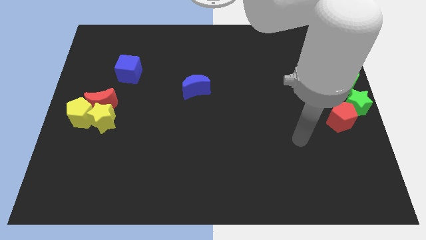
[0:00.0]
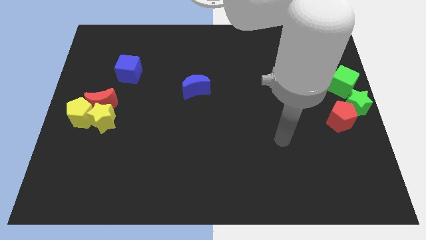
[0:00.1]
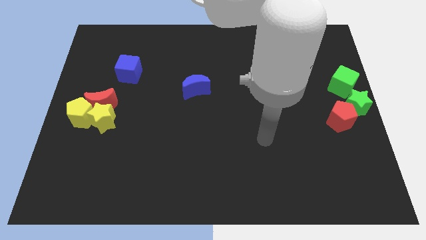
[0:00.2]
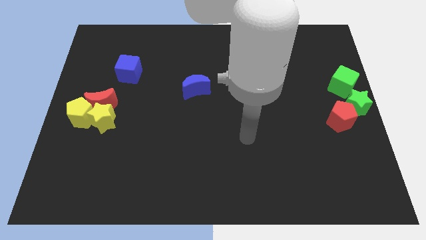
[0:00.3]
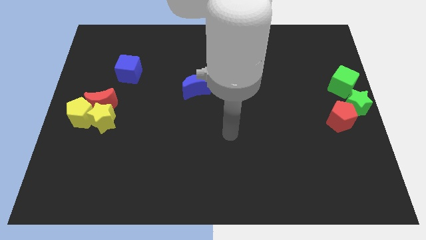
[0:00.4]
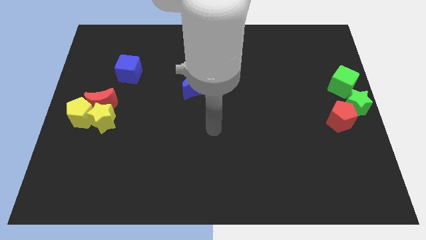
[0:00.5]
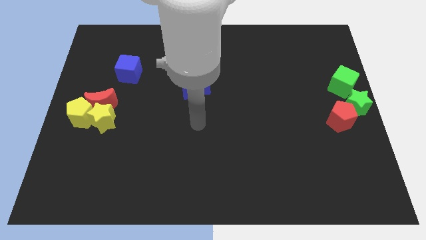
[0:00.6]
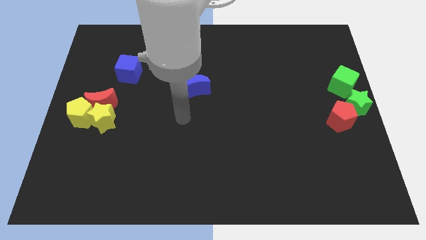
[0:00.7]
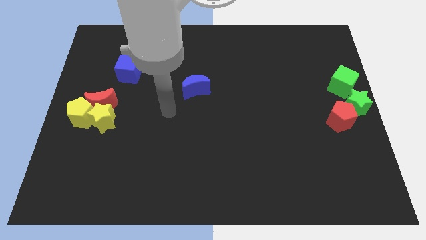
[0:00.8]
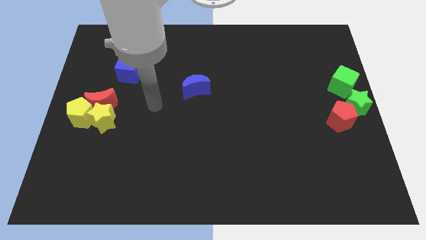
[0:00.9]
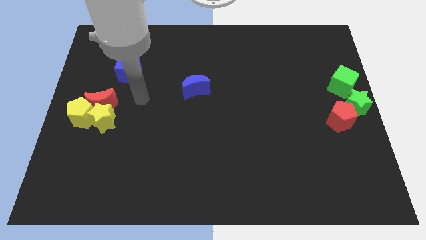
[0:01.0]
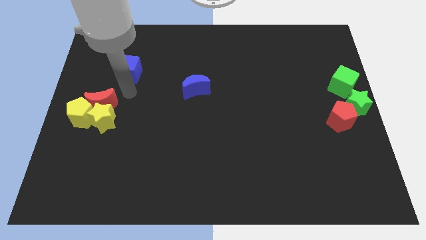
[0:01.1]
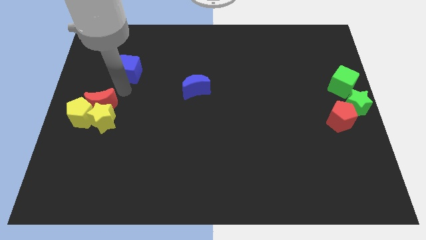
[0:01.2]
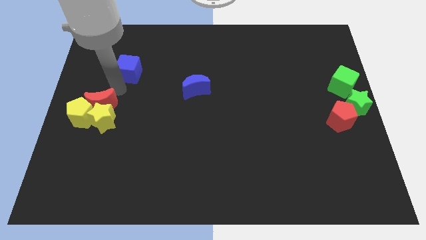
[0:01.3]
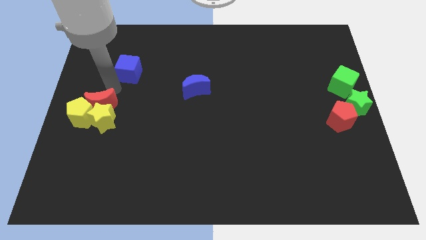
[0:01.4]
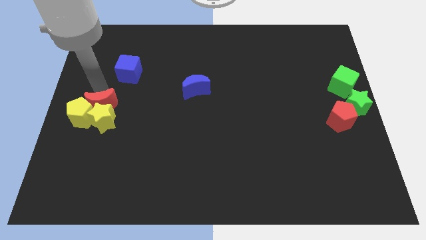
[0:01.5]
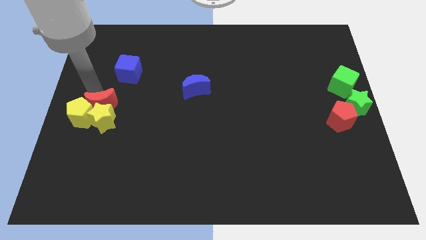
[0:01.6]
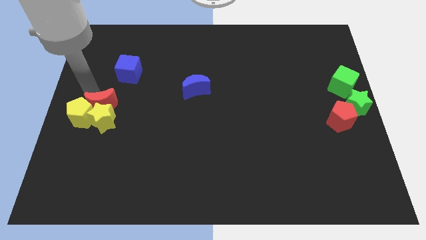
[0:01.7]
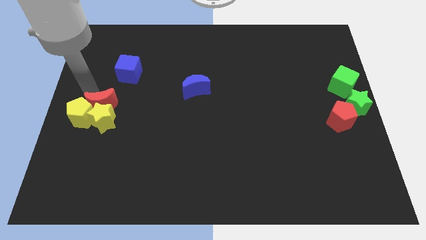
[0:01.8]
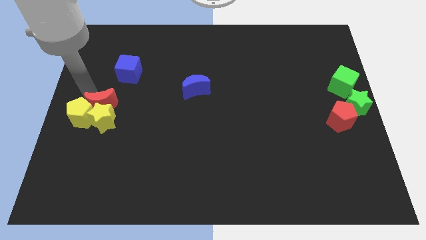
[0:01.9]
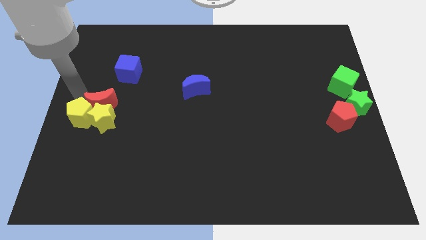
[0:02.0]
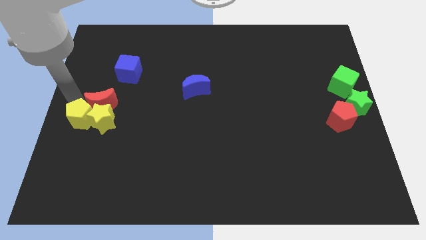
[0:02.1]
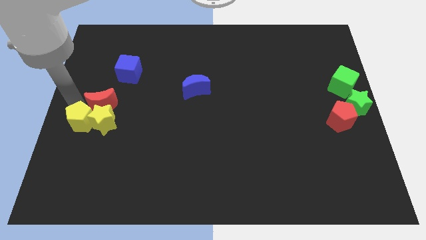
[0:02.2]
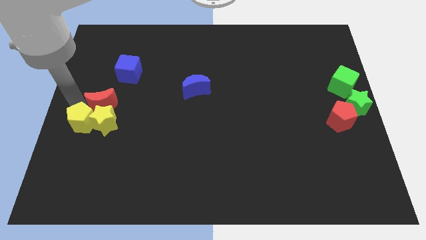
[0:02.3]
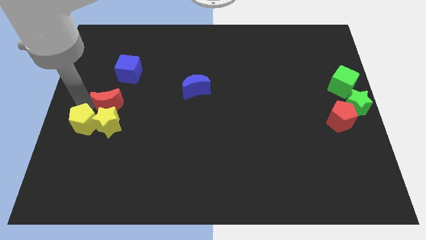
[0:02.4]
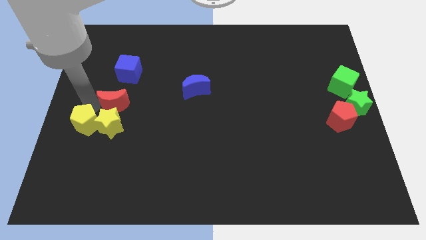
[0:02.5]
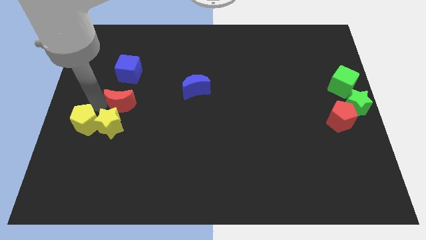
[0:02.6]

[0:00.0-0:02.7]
push red crescent below blue cube

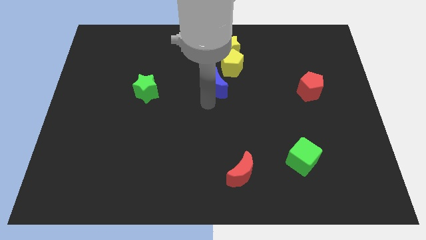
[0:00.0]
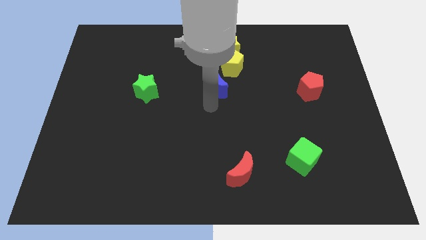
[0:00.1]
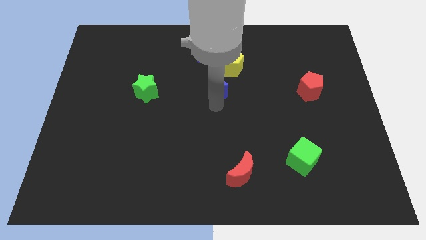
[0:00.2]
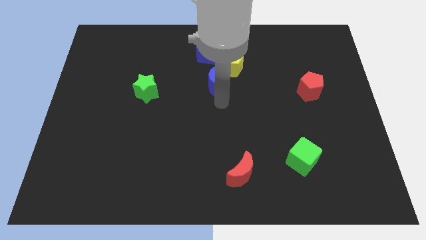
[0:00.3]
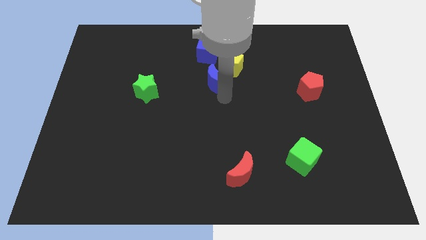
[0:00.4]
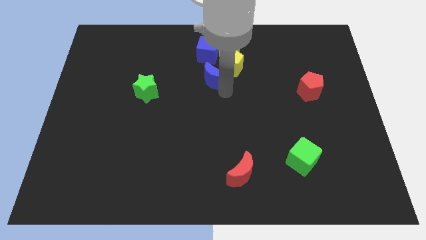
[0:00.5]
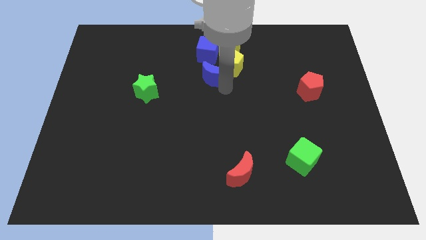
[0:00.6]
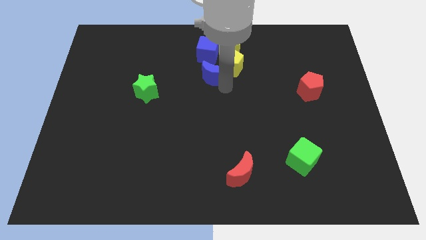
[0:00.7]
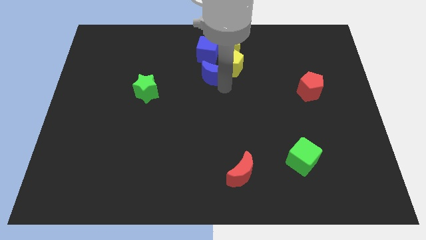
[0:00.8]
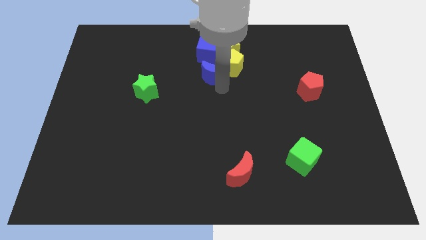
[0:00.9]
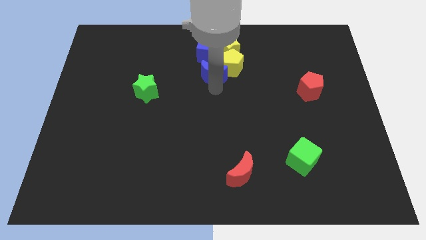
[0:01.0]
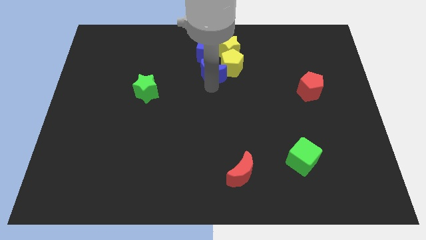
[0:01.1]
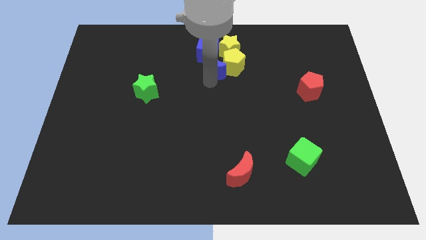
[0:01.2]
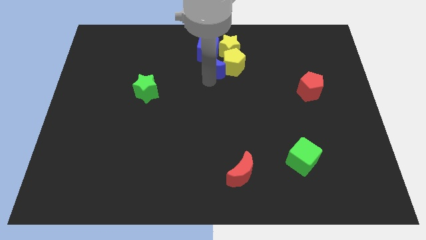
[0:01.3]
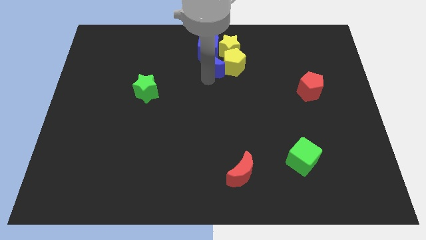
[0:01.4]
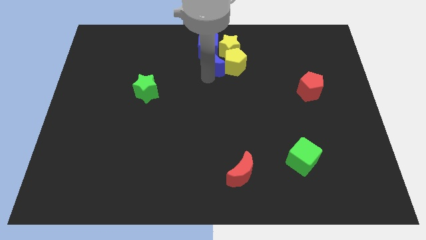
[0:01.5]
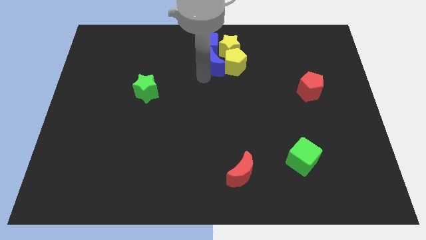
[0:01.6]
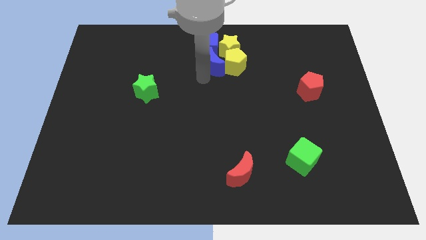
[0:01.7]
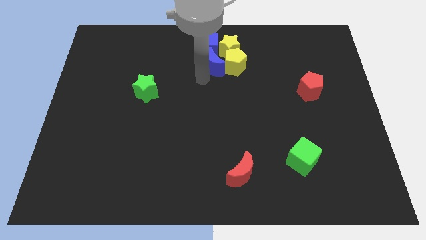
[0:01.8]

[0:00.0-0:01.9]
move the blue moon to the left of the yellow pentagon

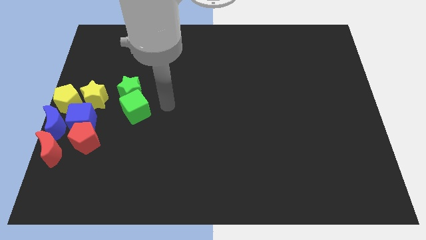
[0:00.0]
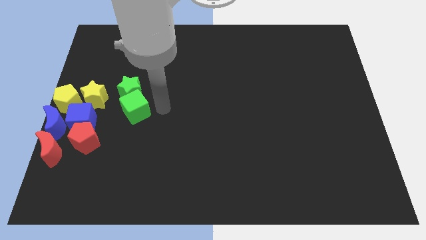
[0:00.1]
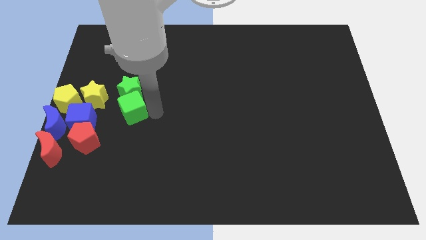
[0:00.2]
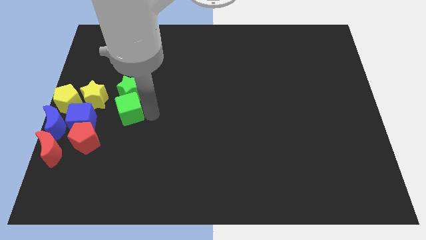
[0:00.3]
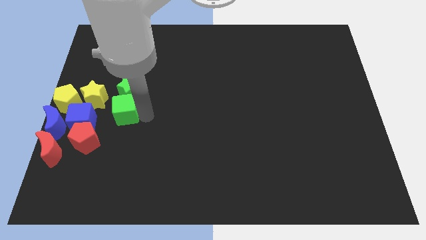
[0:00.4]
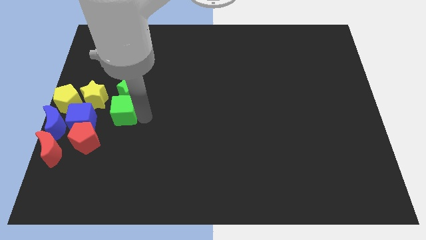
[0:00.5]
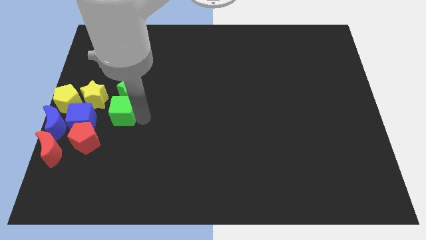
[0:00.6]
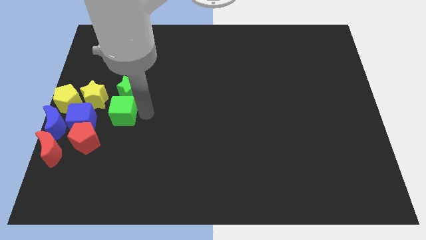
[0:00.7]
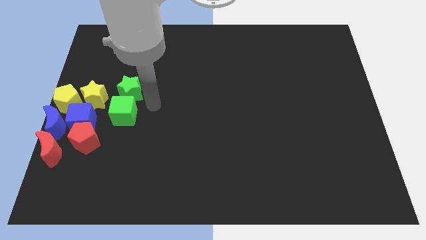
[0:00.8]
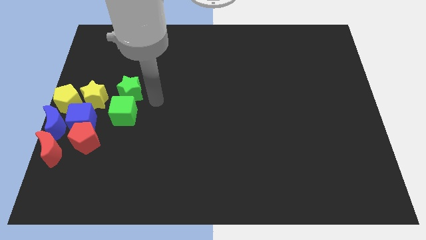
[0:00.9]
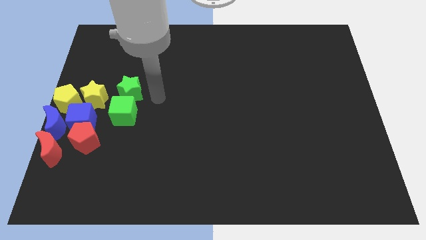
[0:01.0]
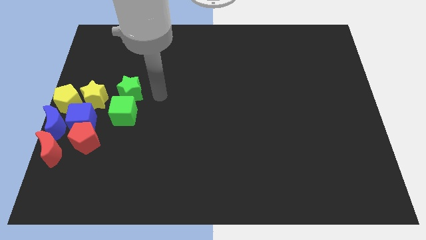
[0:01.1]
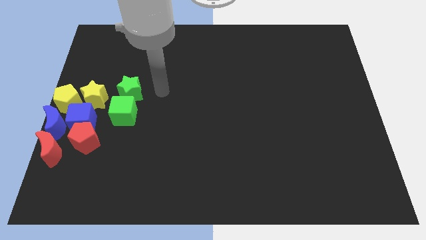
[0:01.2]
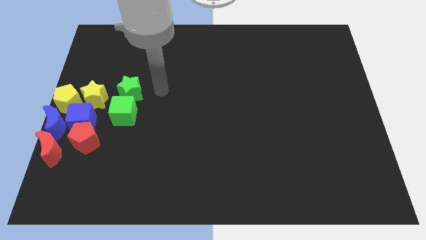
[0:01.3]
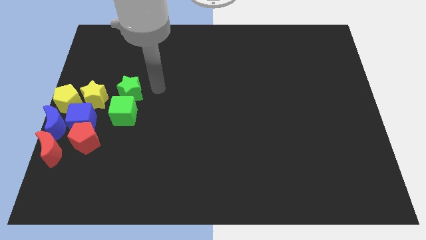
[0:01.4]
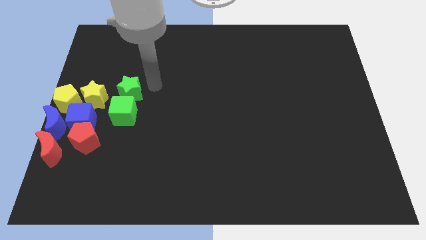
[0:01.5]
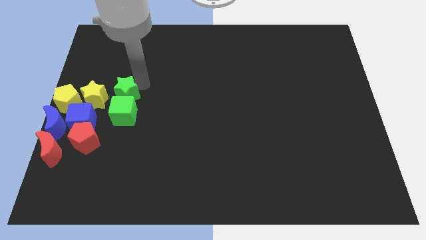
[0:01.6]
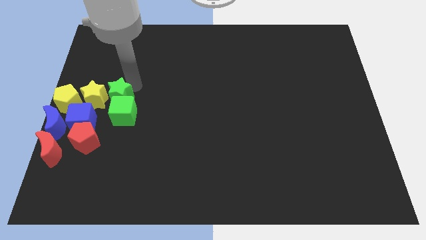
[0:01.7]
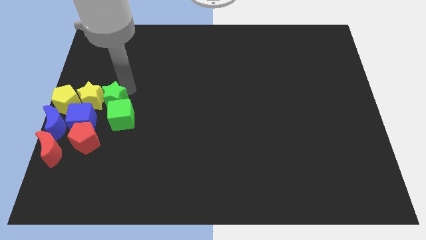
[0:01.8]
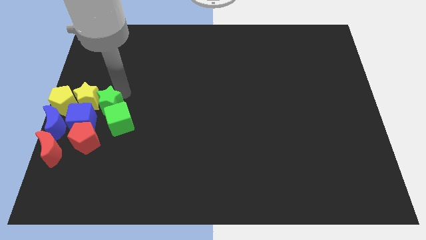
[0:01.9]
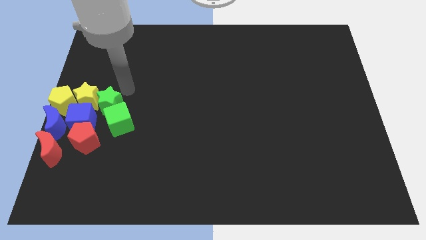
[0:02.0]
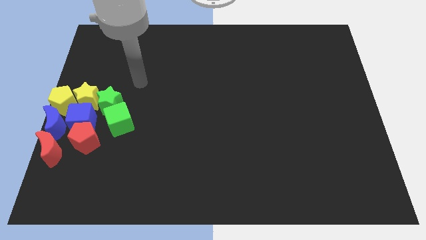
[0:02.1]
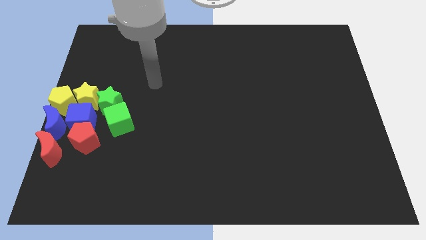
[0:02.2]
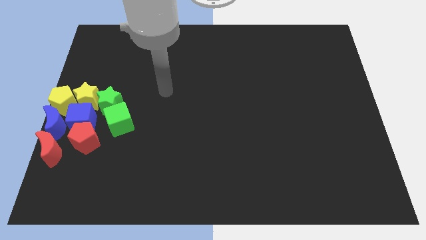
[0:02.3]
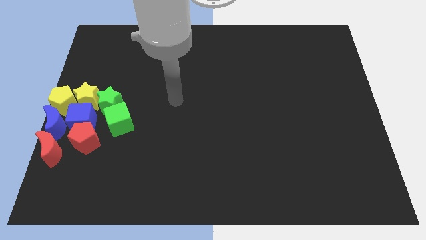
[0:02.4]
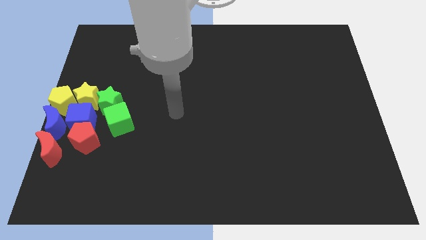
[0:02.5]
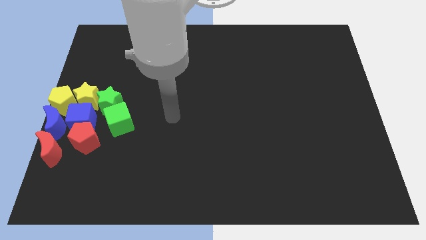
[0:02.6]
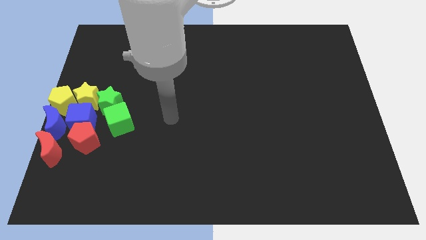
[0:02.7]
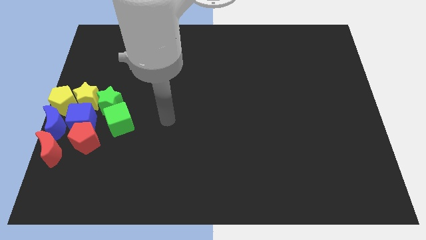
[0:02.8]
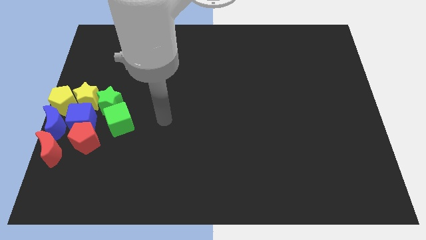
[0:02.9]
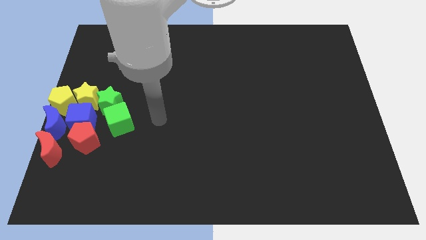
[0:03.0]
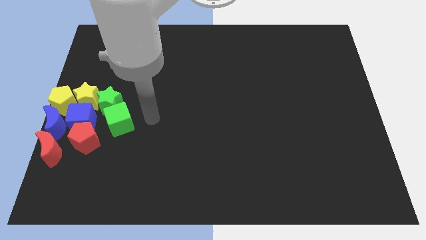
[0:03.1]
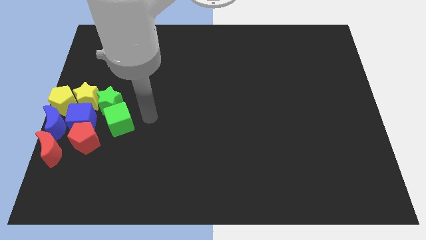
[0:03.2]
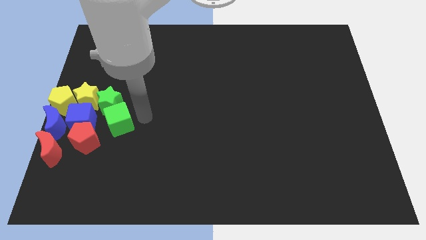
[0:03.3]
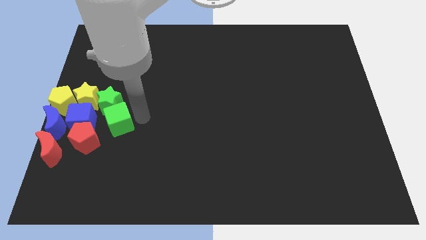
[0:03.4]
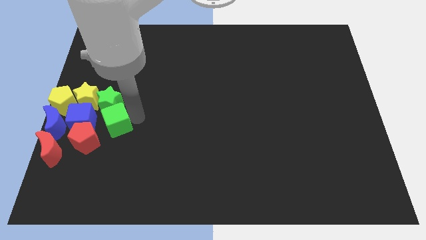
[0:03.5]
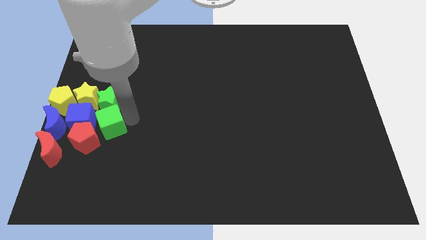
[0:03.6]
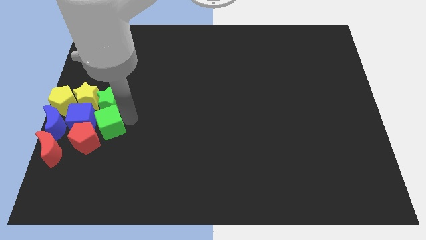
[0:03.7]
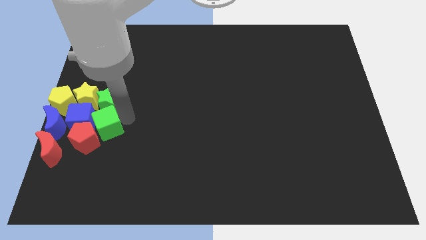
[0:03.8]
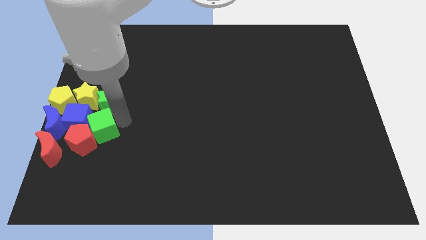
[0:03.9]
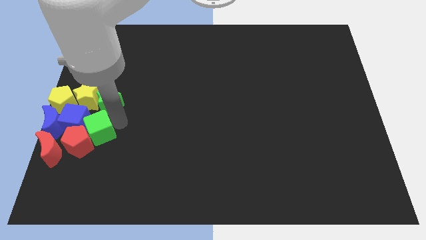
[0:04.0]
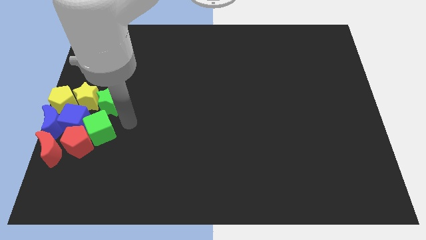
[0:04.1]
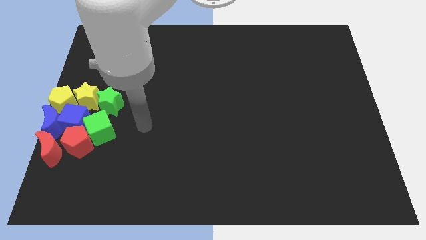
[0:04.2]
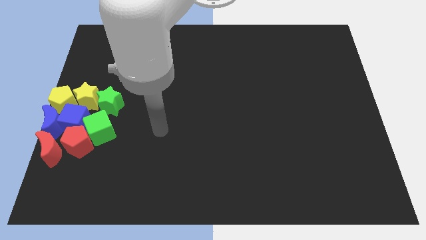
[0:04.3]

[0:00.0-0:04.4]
push the green cube to the right of the blue cube
